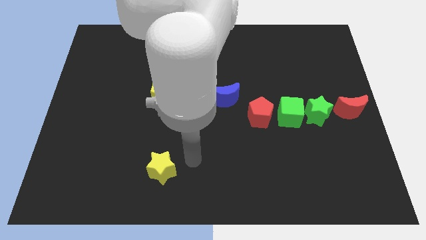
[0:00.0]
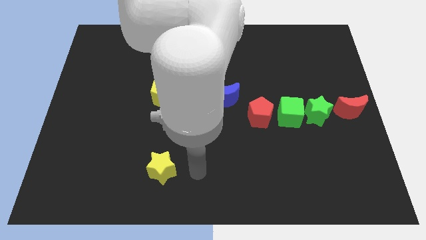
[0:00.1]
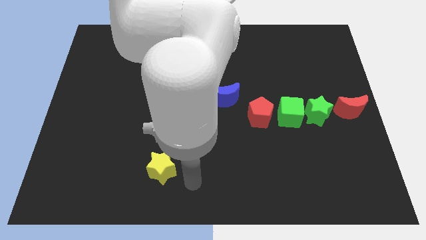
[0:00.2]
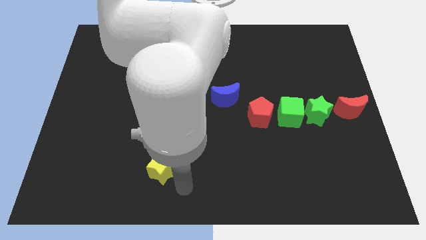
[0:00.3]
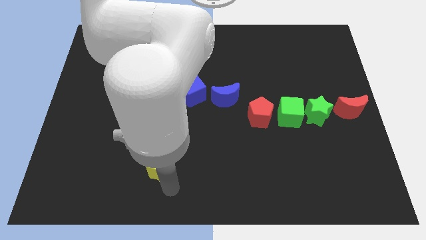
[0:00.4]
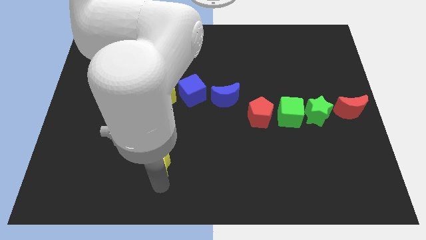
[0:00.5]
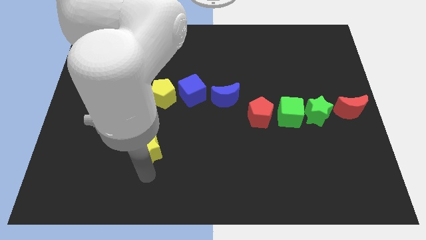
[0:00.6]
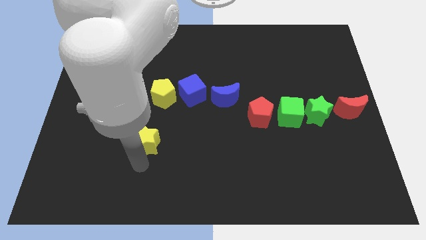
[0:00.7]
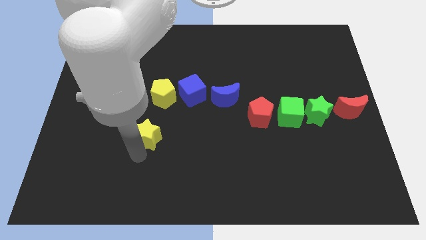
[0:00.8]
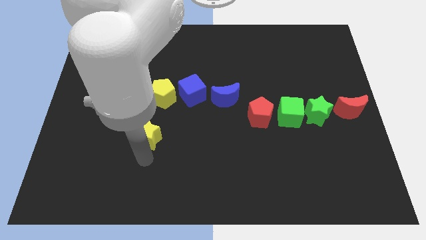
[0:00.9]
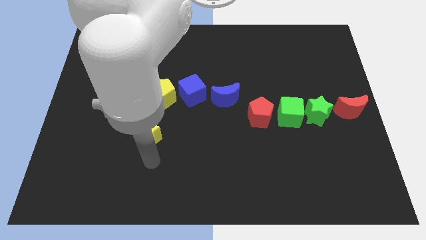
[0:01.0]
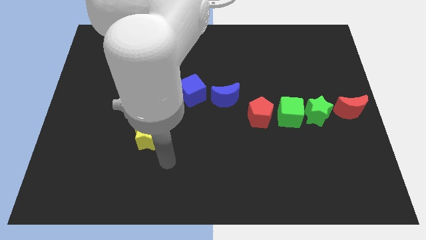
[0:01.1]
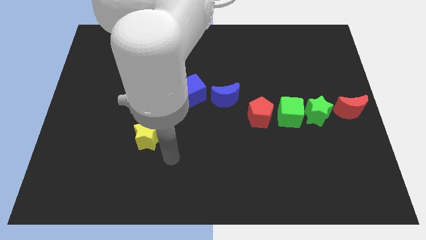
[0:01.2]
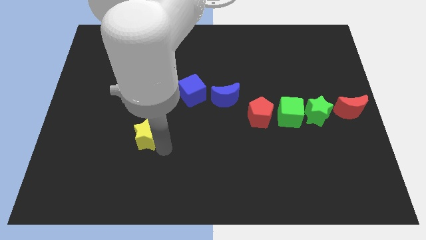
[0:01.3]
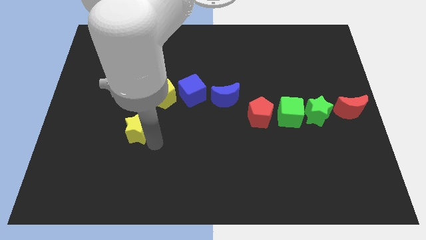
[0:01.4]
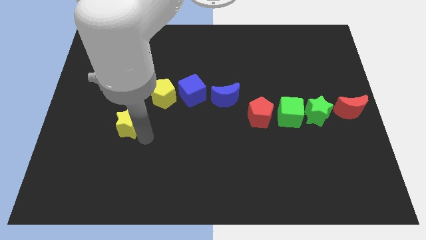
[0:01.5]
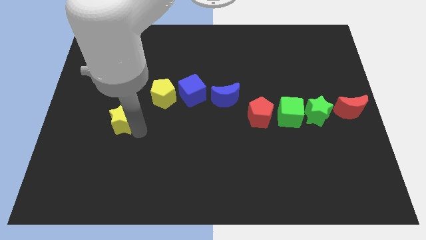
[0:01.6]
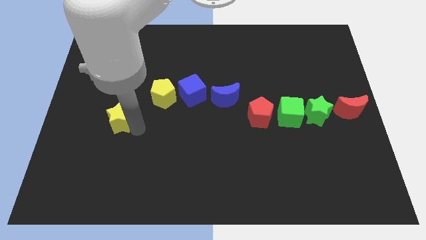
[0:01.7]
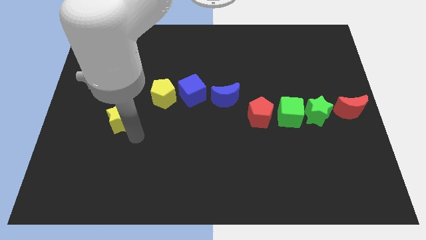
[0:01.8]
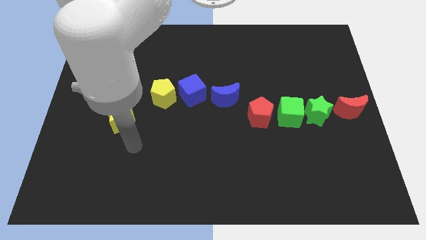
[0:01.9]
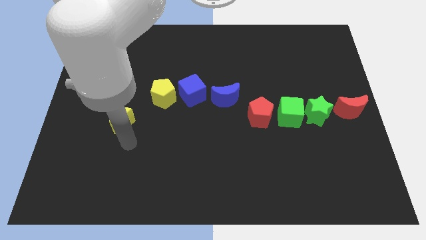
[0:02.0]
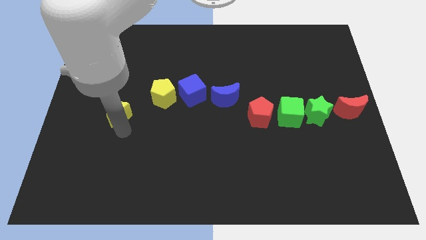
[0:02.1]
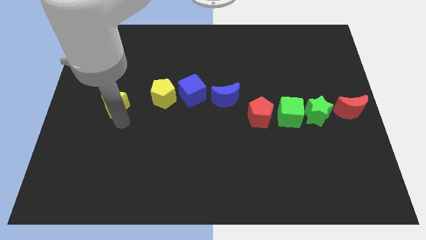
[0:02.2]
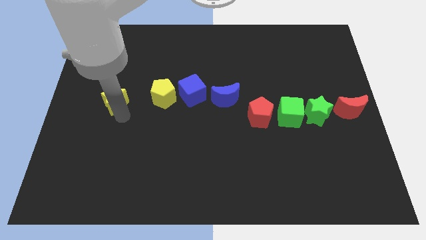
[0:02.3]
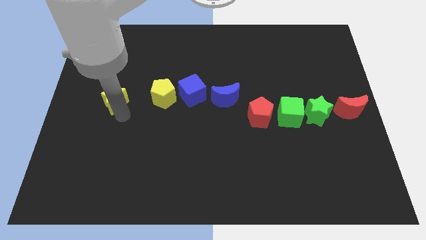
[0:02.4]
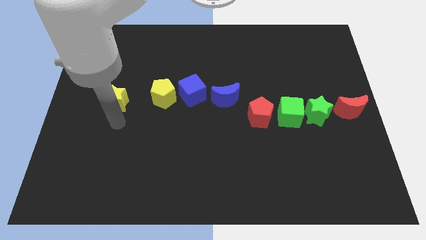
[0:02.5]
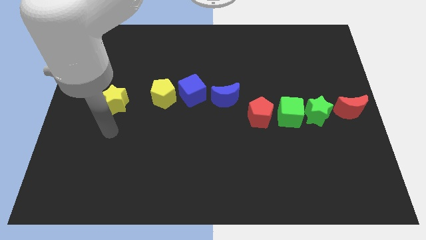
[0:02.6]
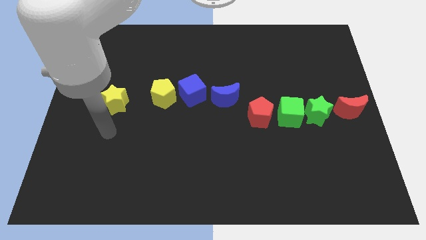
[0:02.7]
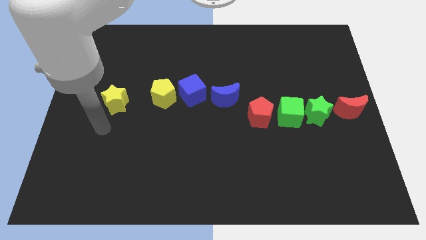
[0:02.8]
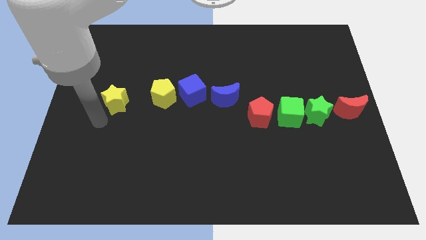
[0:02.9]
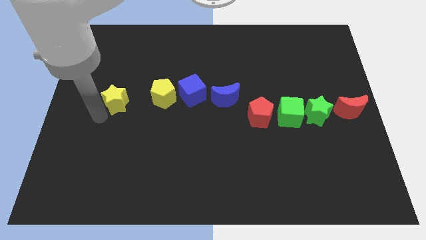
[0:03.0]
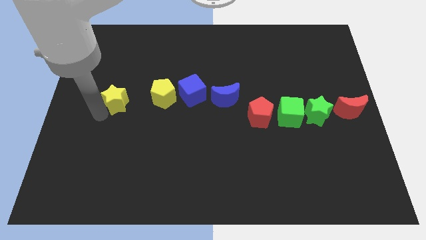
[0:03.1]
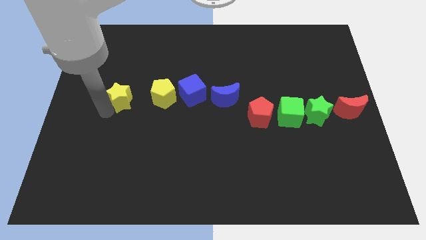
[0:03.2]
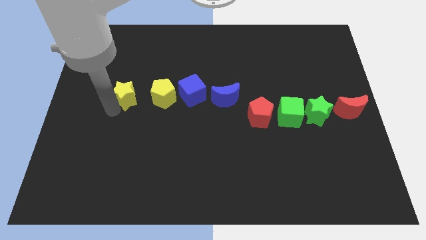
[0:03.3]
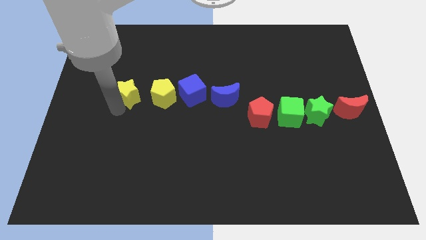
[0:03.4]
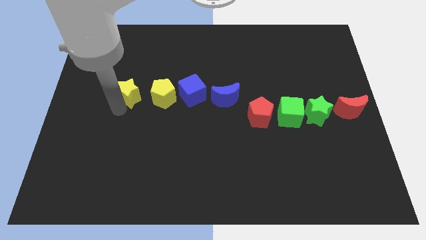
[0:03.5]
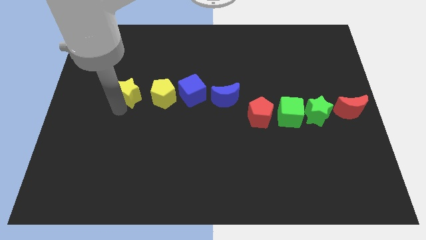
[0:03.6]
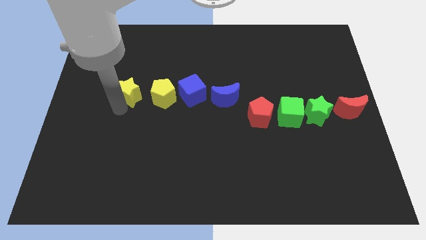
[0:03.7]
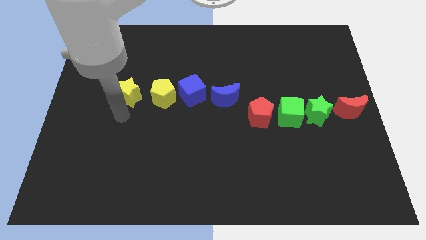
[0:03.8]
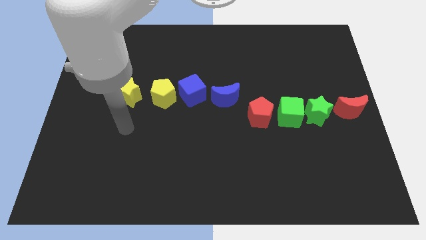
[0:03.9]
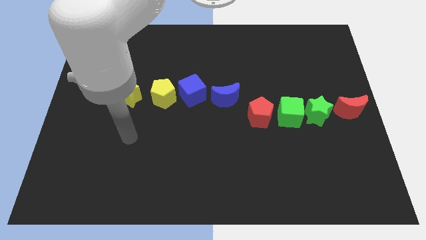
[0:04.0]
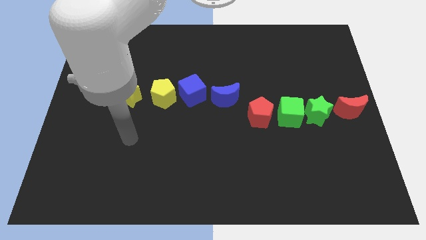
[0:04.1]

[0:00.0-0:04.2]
push the yellow star to the left of the yellow pentagon

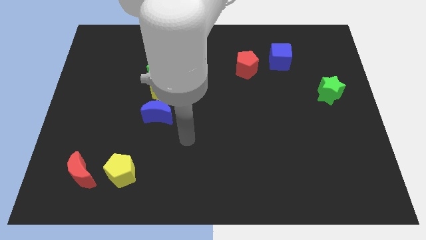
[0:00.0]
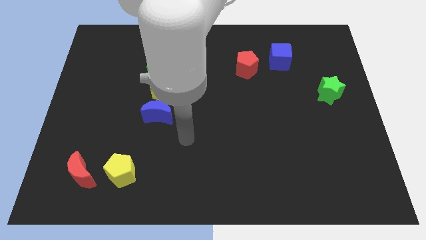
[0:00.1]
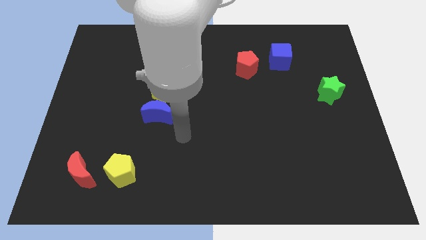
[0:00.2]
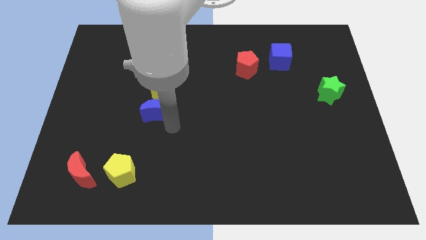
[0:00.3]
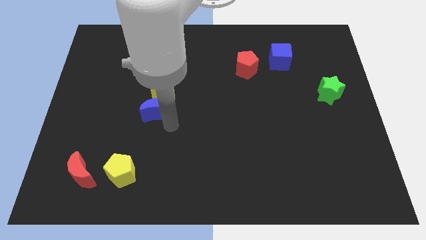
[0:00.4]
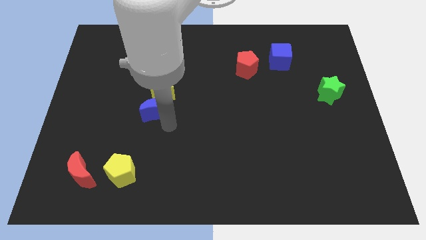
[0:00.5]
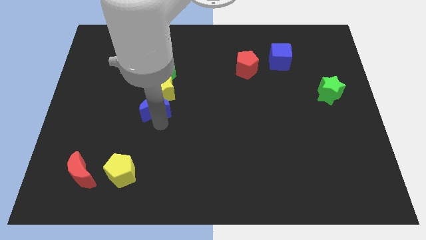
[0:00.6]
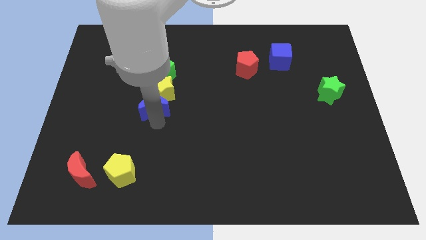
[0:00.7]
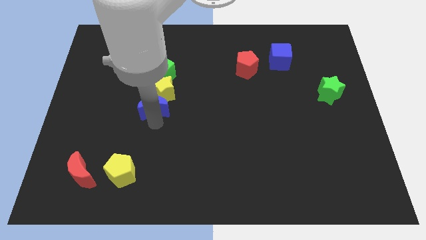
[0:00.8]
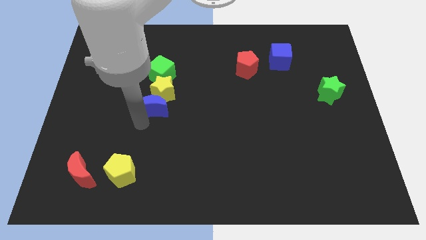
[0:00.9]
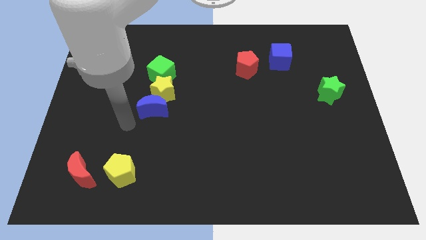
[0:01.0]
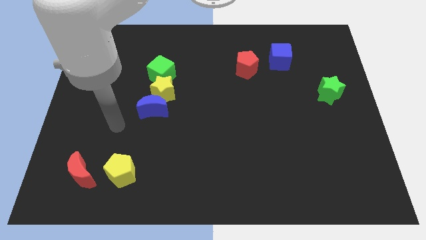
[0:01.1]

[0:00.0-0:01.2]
tap the blue moon

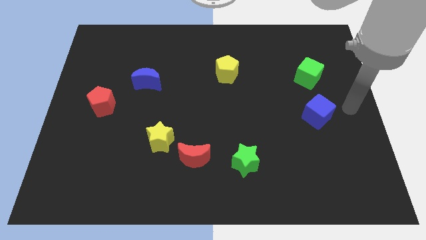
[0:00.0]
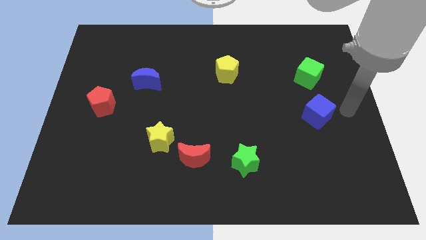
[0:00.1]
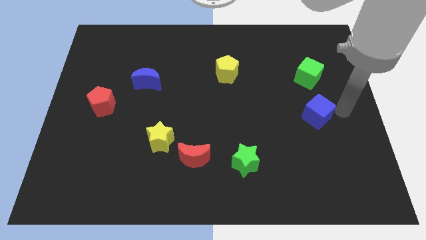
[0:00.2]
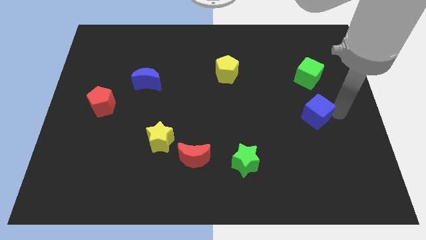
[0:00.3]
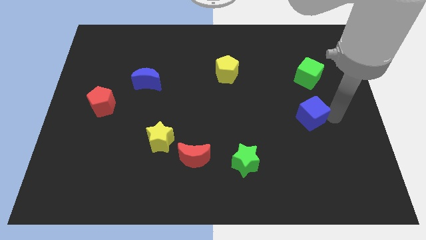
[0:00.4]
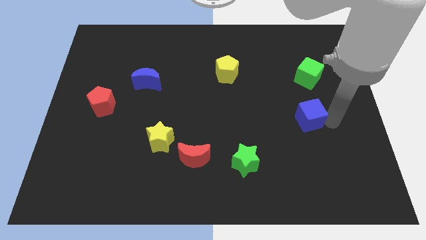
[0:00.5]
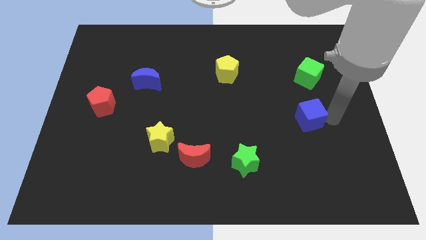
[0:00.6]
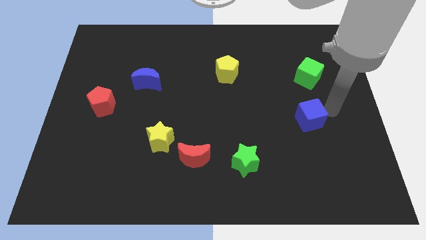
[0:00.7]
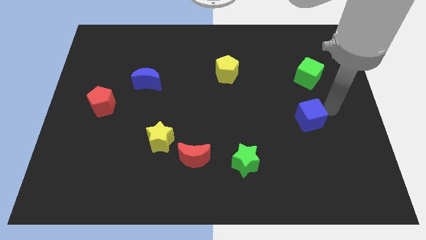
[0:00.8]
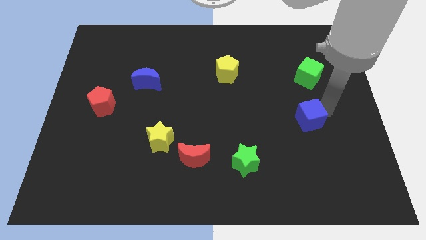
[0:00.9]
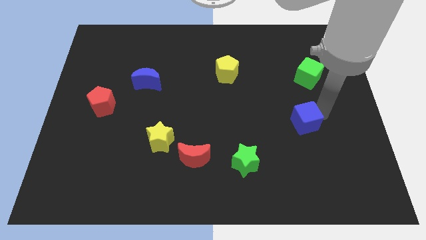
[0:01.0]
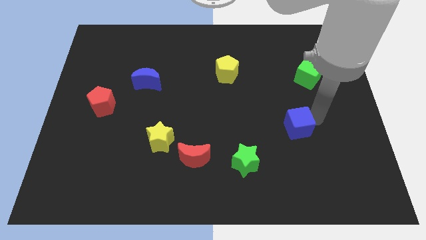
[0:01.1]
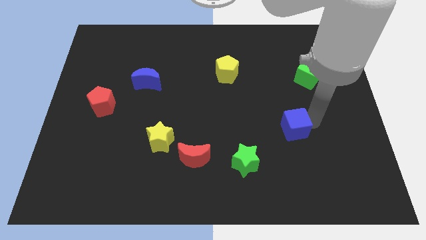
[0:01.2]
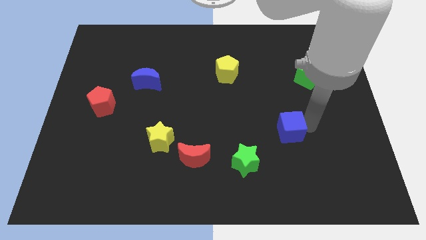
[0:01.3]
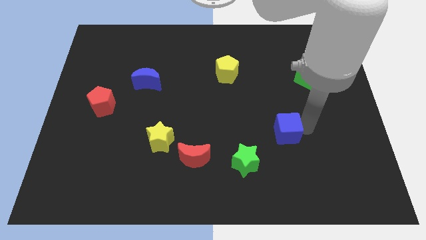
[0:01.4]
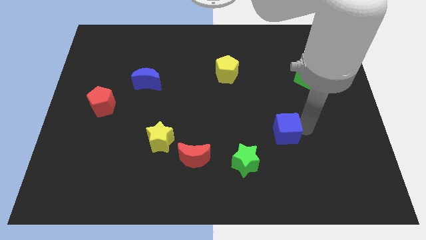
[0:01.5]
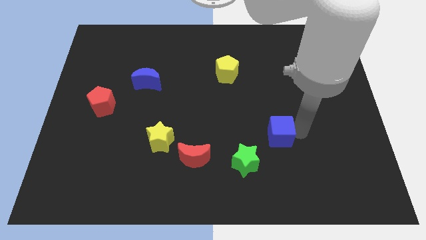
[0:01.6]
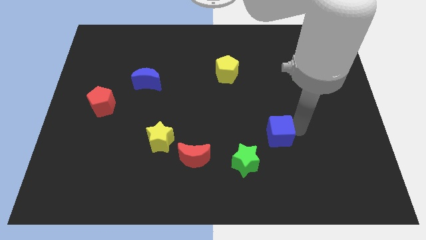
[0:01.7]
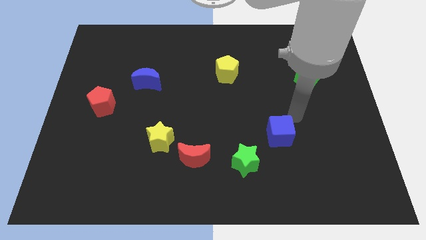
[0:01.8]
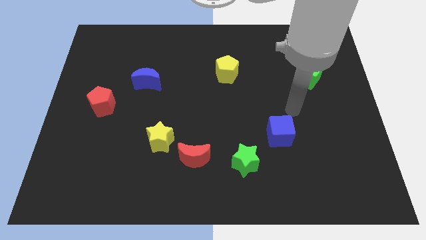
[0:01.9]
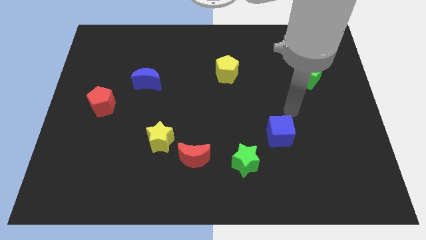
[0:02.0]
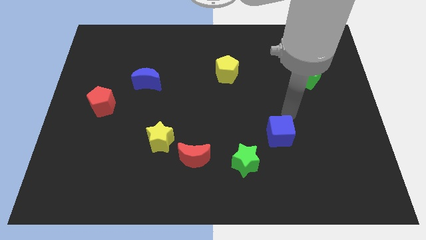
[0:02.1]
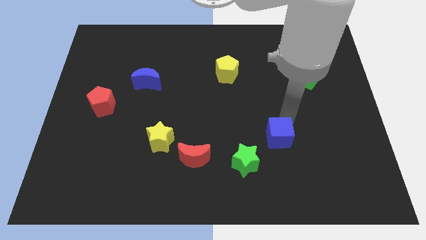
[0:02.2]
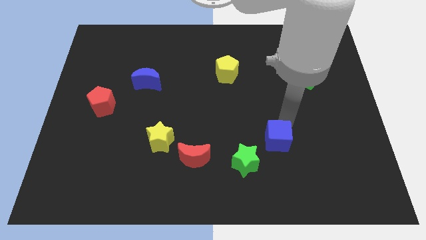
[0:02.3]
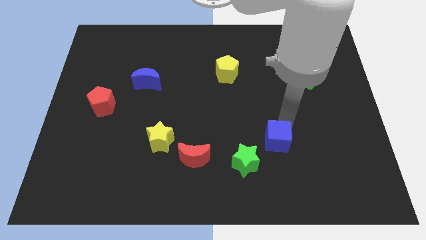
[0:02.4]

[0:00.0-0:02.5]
push the blue cube near to the green star

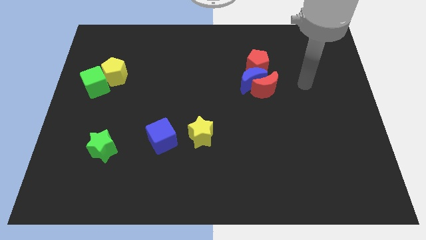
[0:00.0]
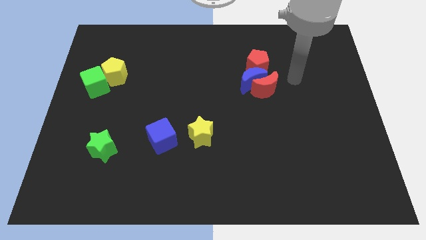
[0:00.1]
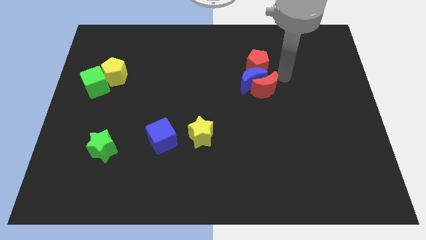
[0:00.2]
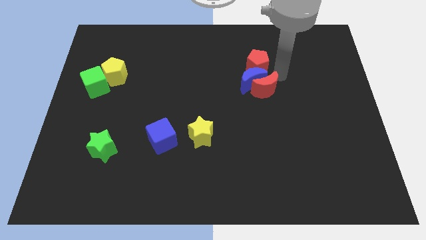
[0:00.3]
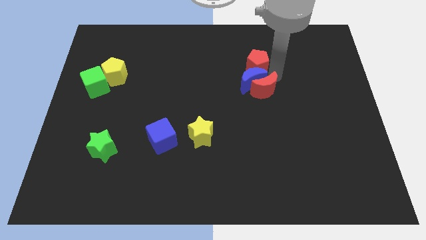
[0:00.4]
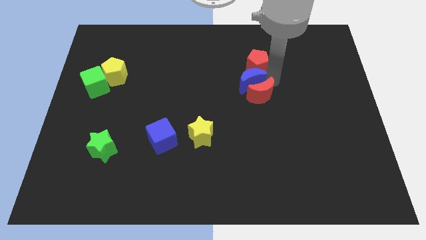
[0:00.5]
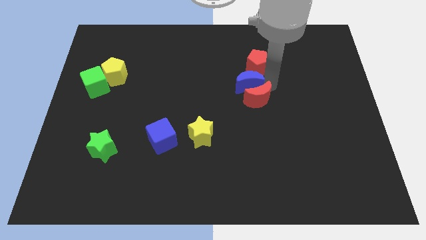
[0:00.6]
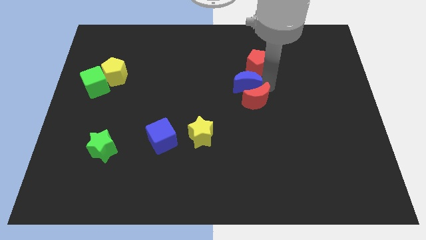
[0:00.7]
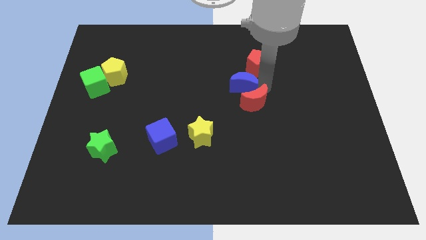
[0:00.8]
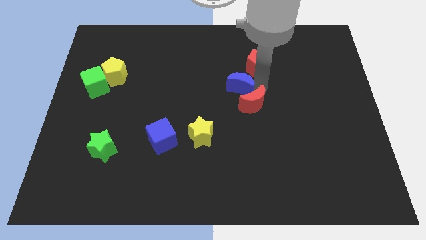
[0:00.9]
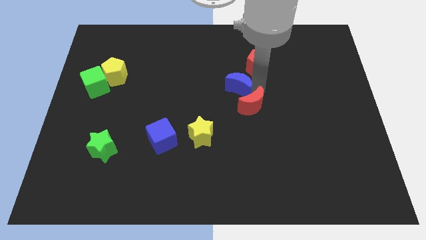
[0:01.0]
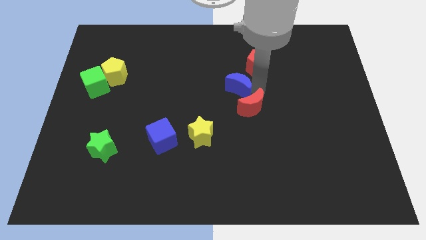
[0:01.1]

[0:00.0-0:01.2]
push the moons towards the center of the board
